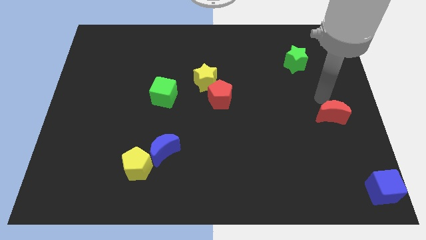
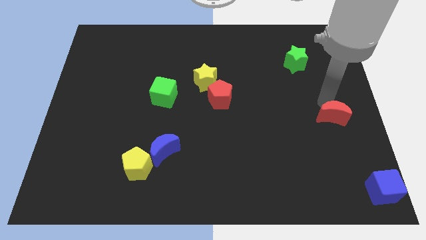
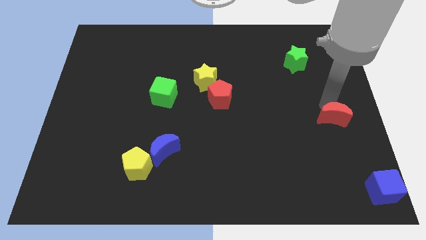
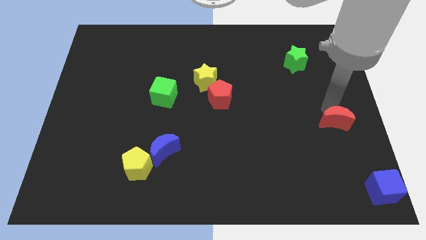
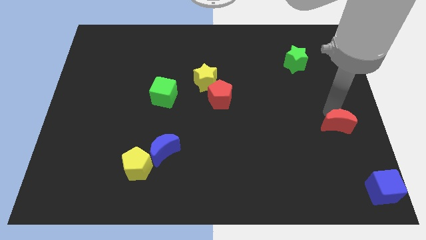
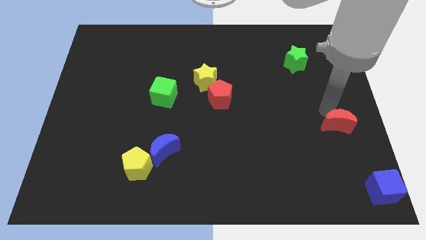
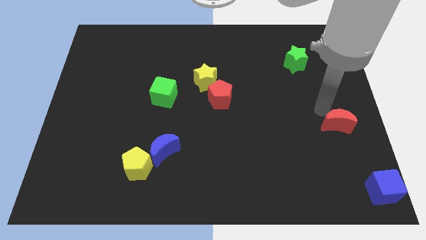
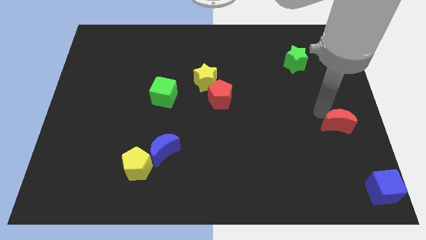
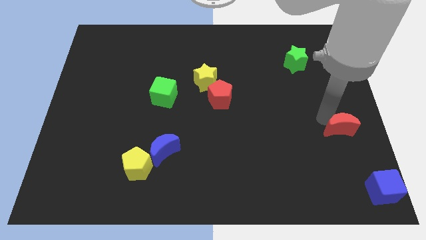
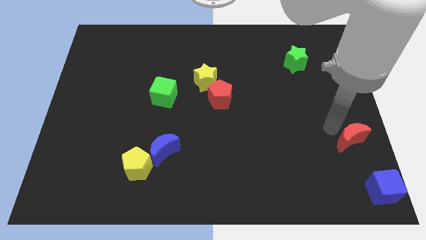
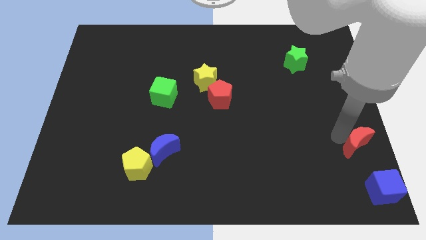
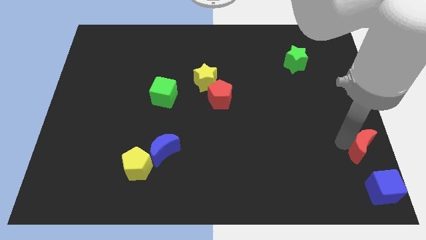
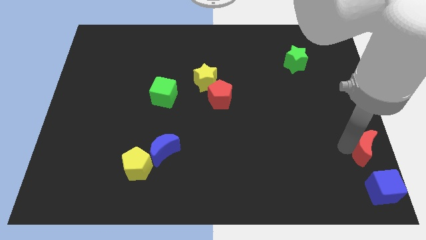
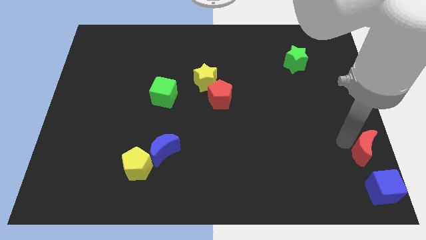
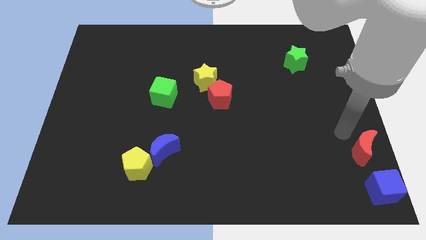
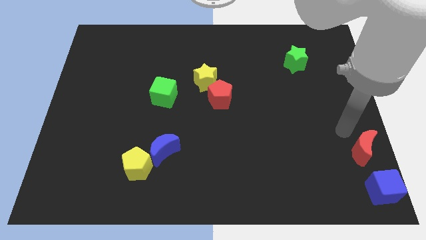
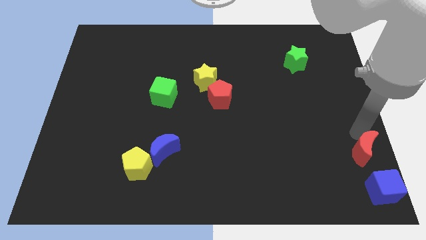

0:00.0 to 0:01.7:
place red moon to the top of the blue cube

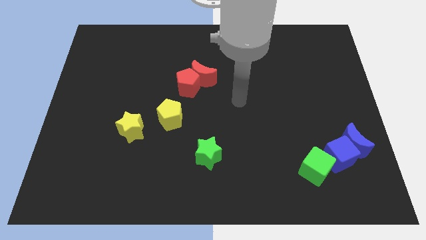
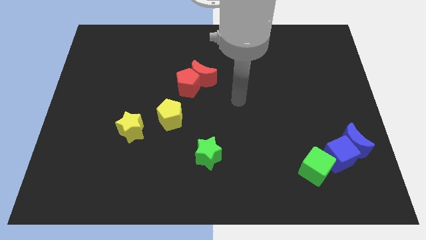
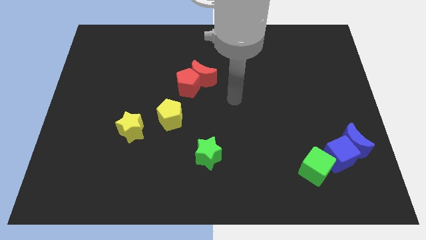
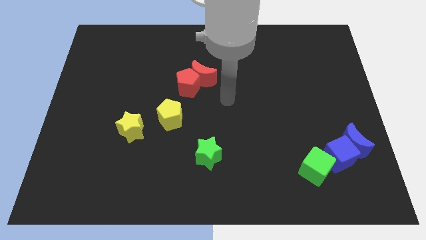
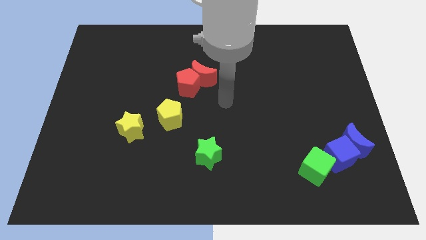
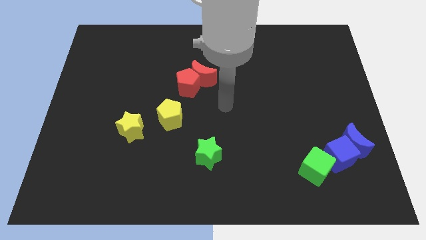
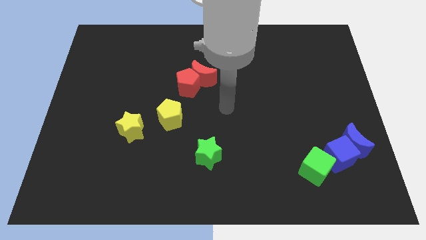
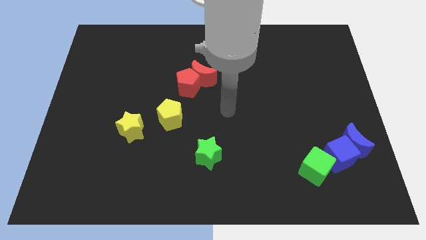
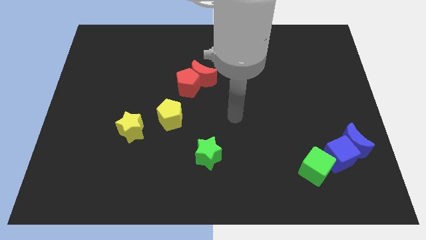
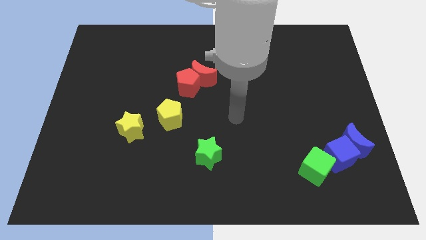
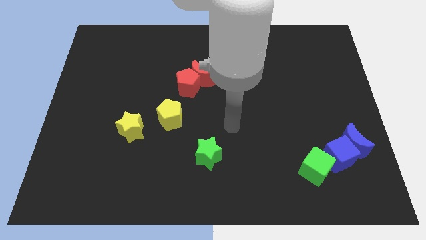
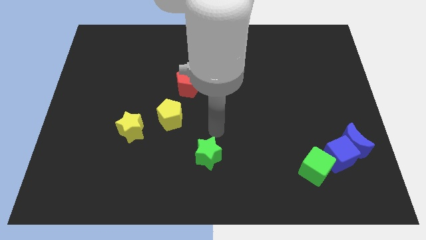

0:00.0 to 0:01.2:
move your arm towards the green star

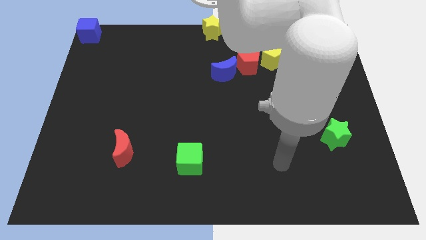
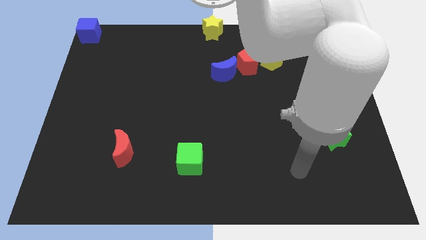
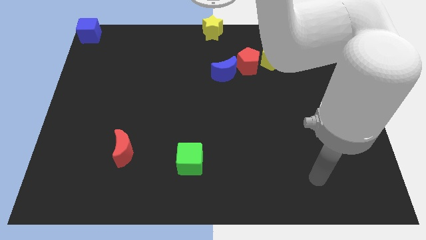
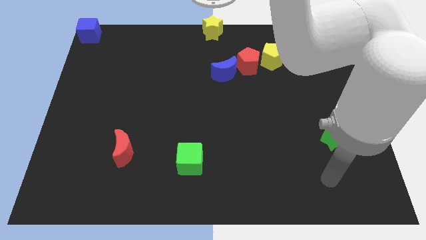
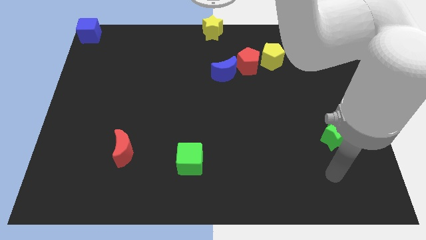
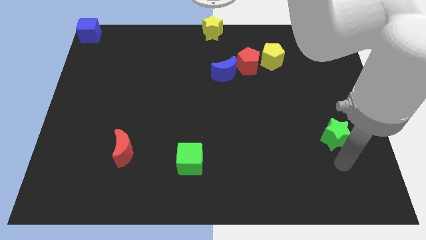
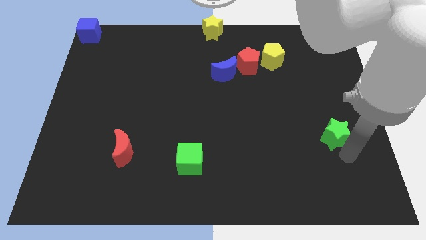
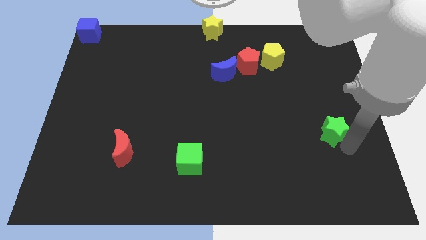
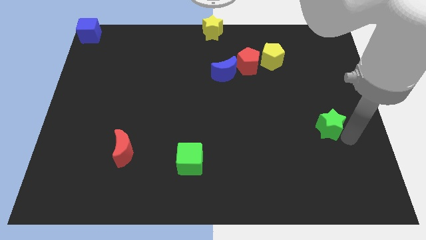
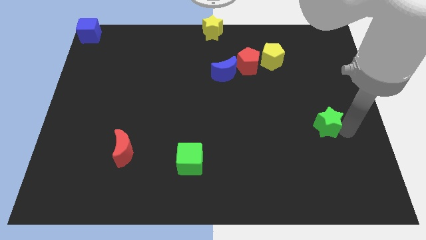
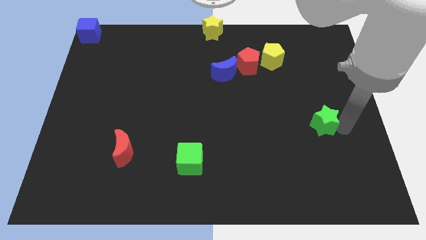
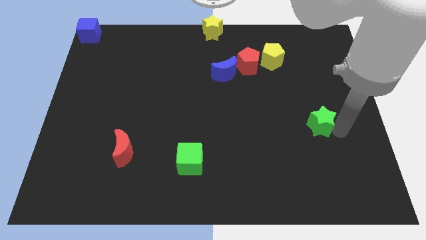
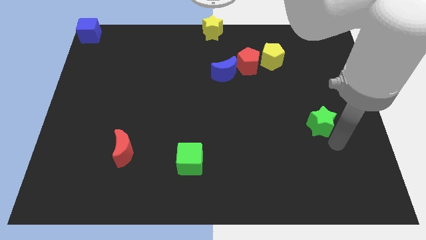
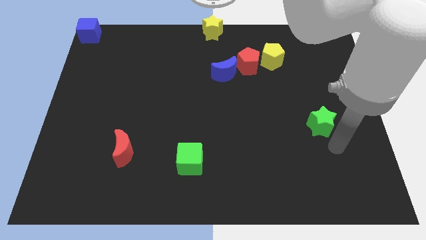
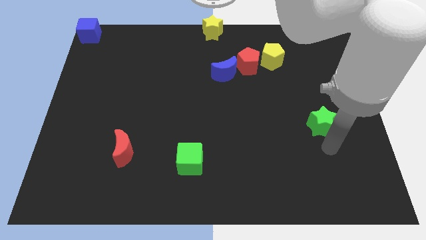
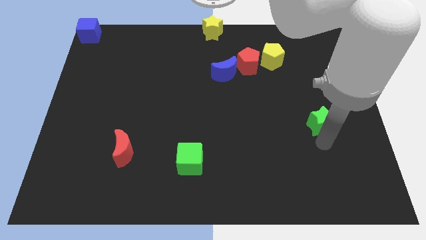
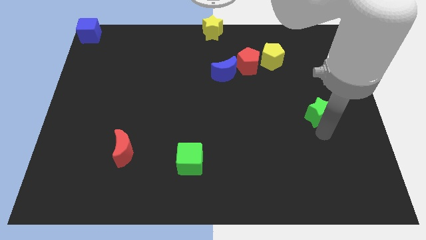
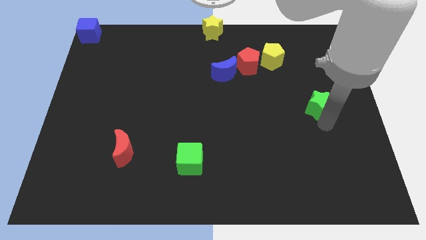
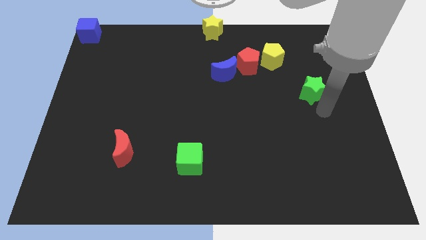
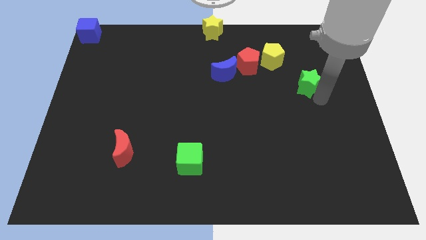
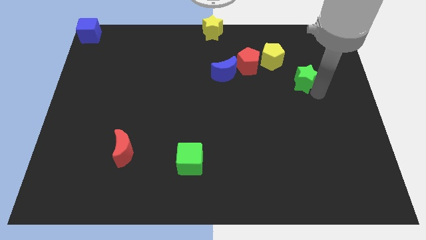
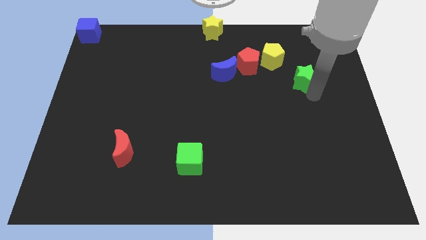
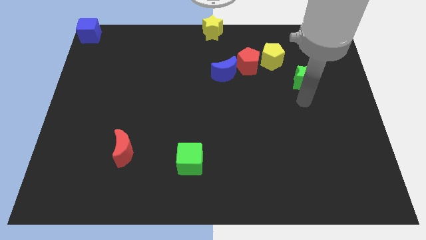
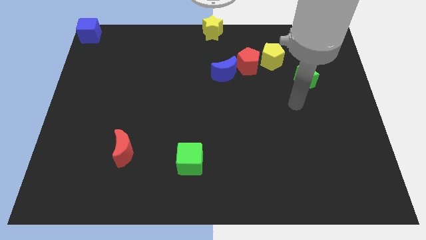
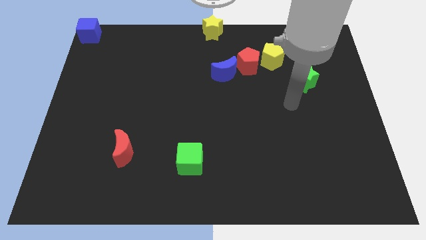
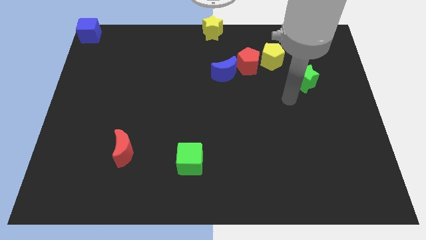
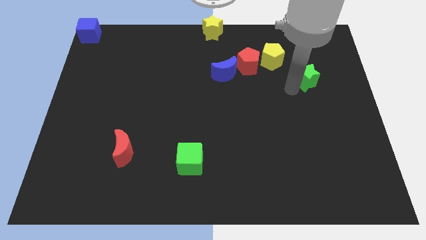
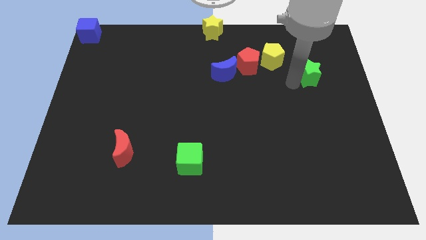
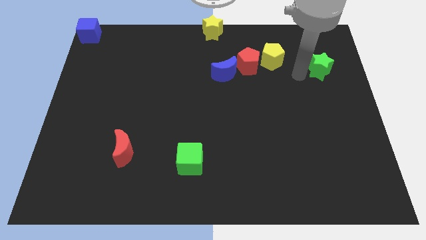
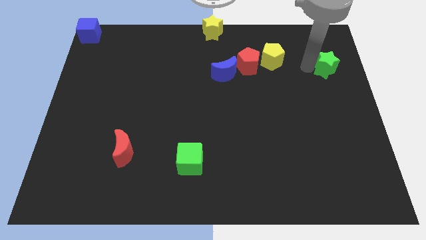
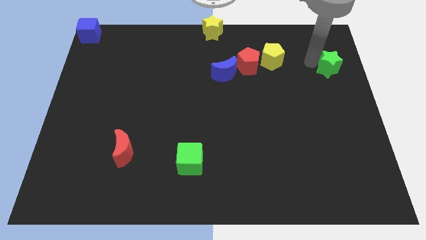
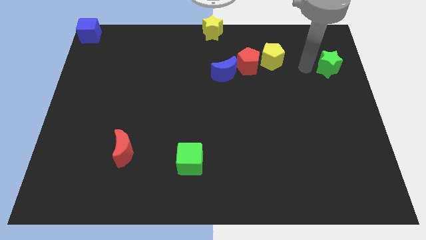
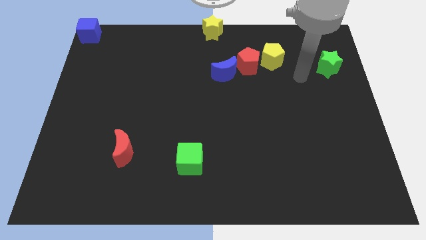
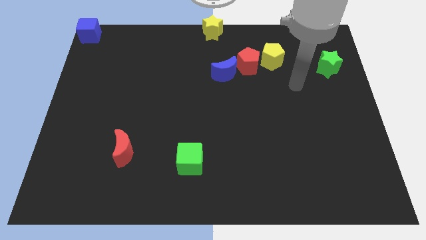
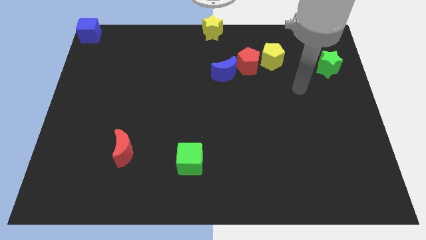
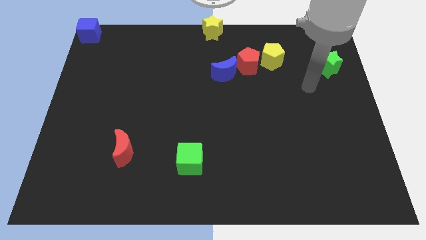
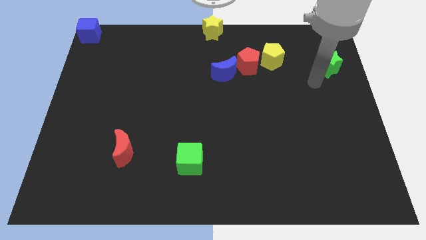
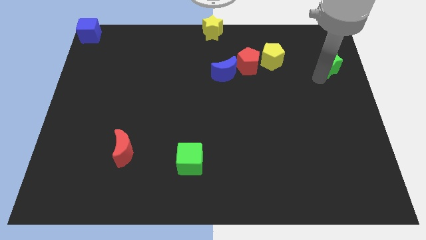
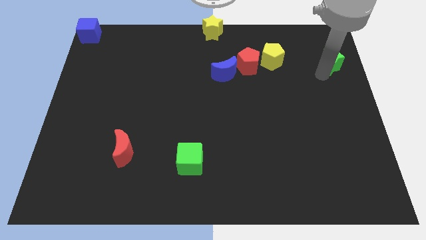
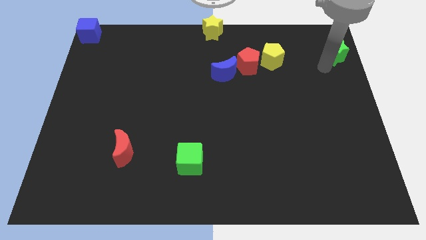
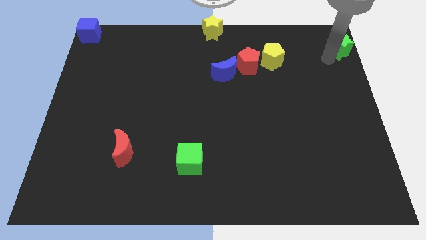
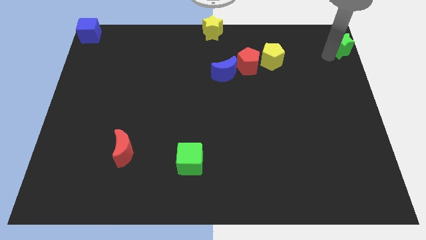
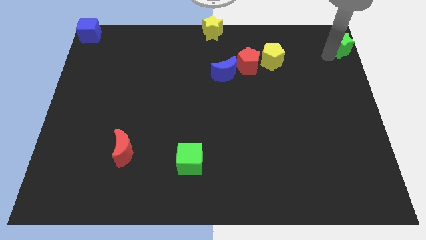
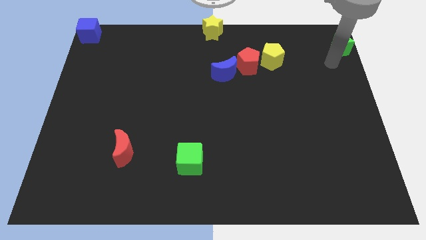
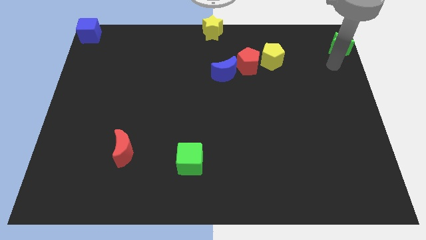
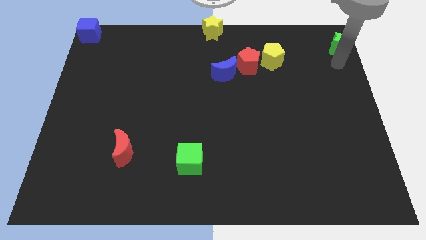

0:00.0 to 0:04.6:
push the green star

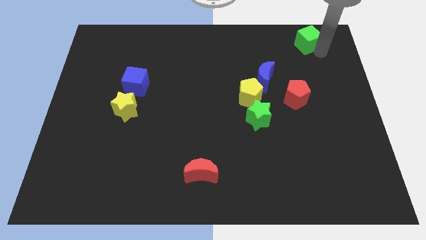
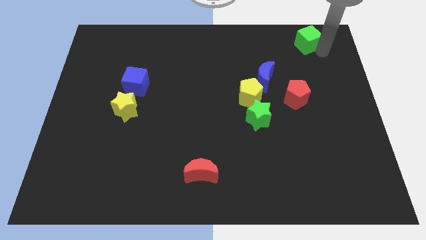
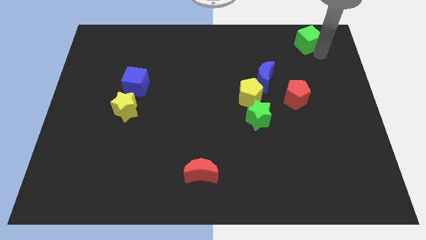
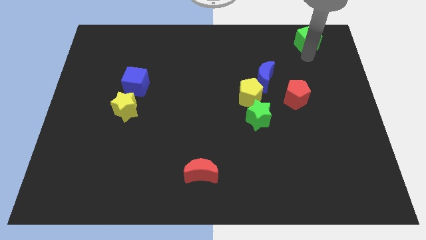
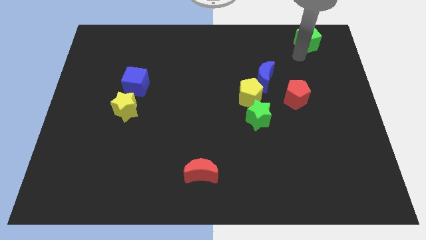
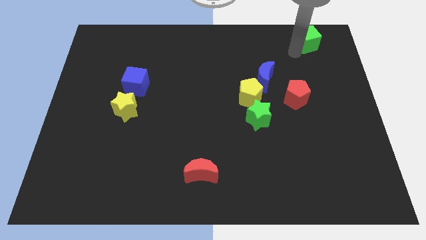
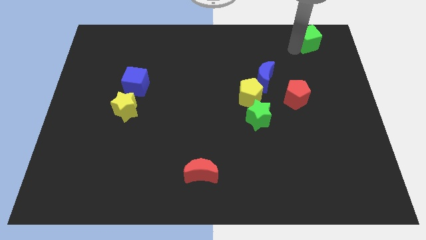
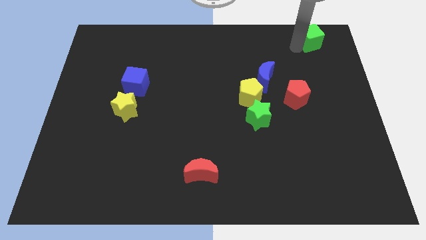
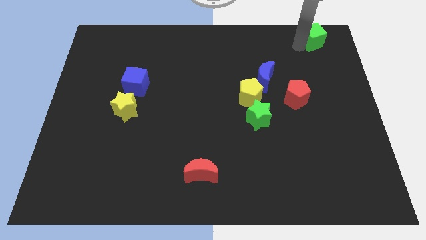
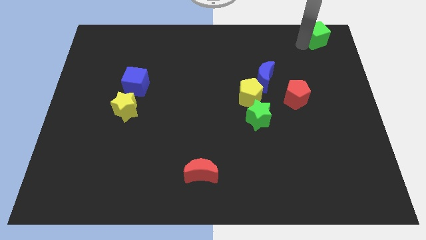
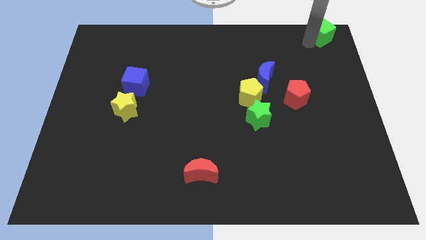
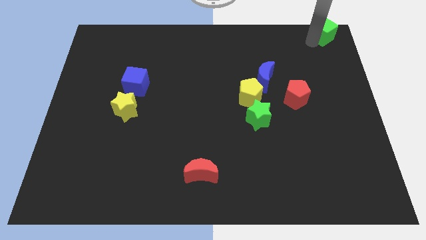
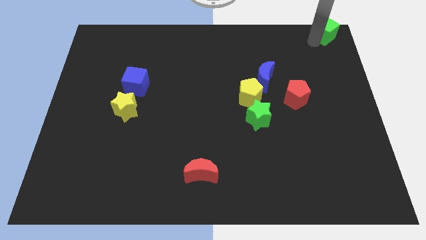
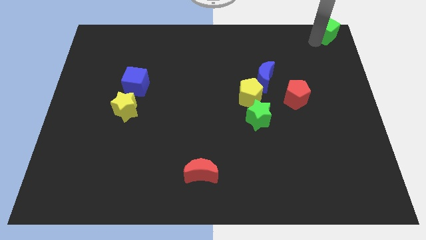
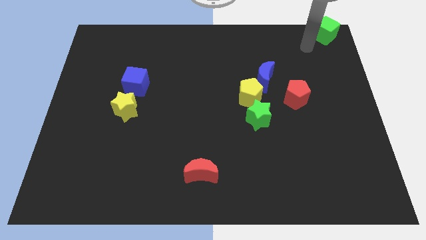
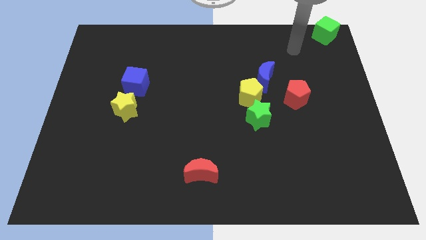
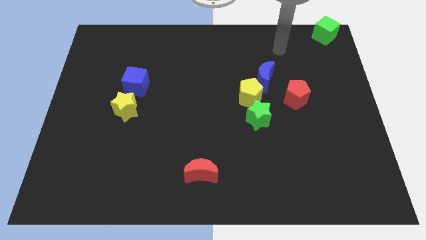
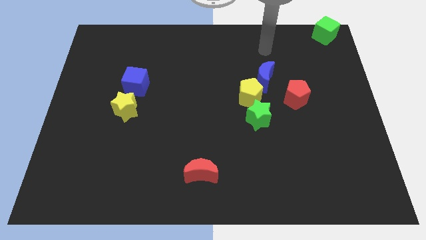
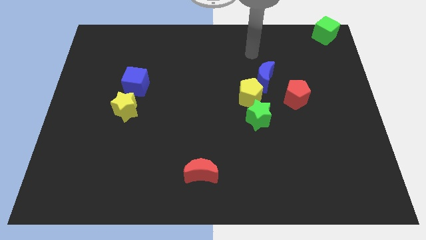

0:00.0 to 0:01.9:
move the green cube to the top right
